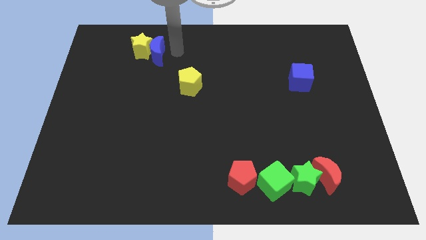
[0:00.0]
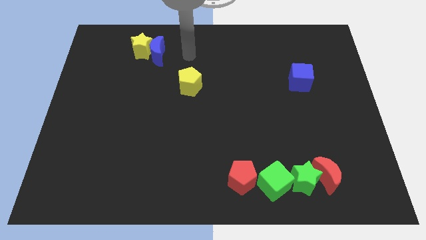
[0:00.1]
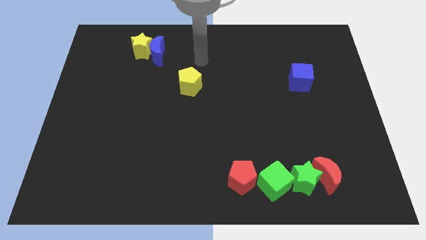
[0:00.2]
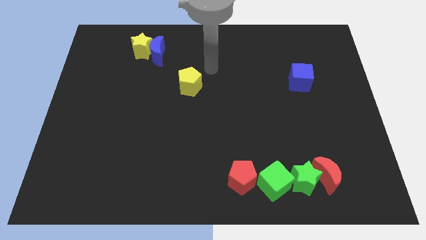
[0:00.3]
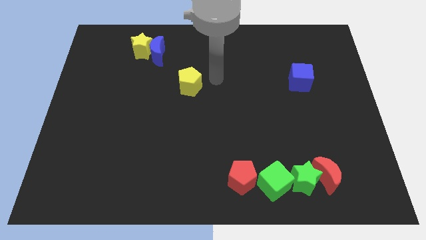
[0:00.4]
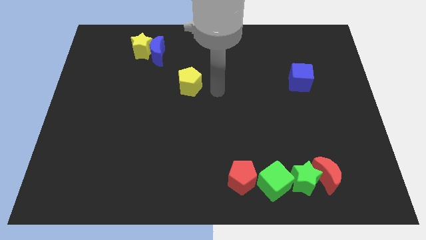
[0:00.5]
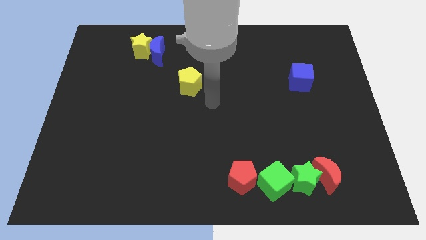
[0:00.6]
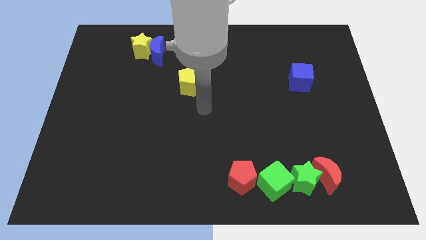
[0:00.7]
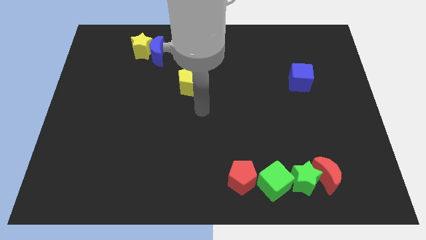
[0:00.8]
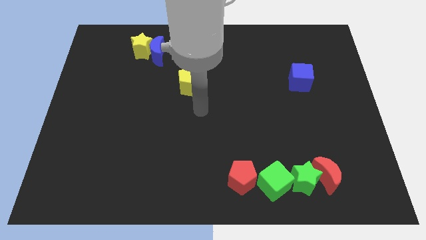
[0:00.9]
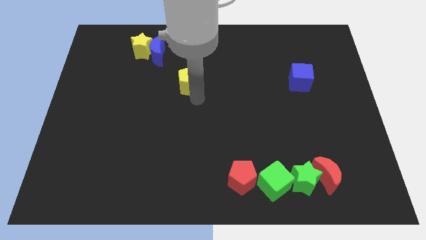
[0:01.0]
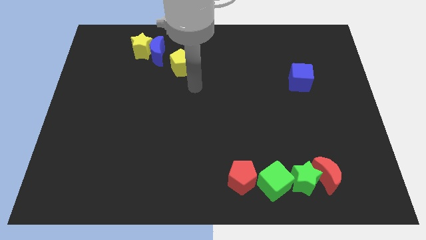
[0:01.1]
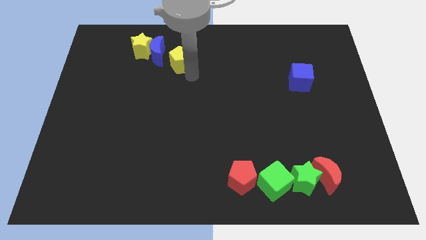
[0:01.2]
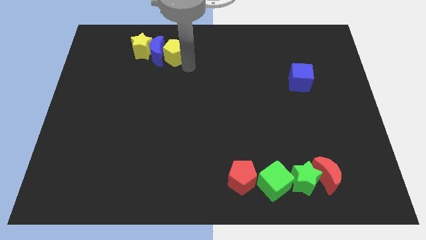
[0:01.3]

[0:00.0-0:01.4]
place the yellow pentagon to the right of the blue moon

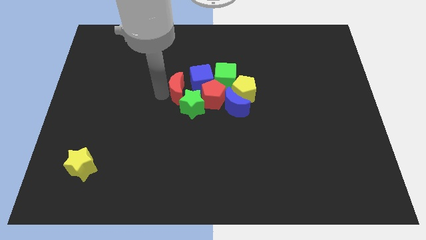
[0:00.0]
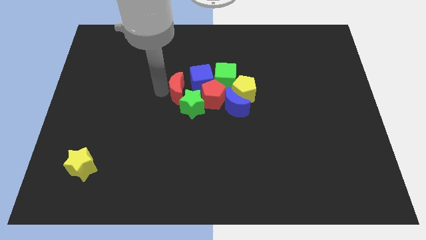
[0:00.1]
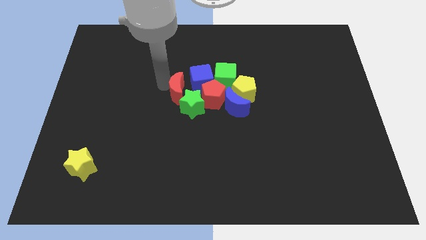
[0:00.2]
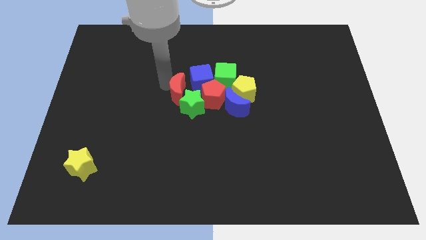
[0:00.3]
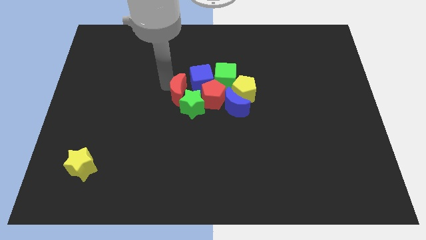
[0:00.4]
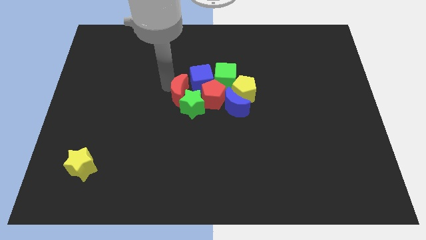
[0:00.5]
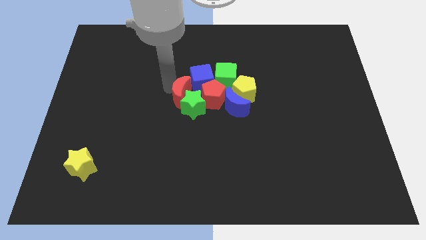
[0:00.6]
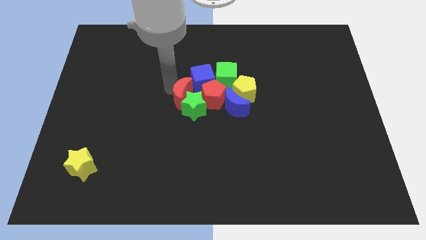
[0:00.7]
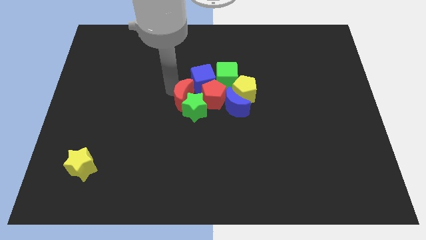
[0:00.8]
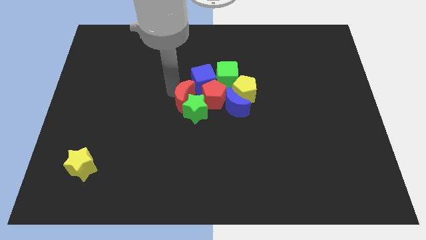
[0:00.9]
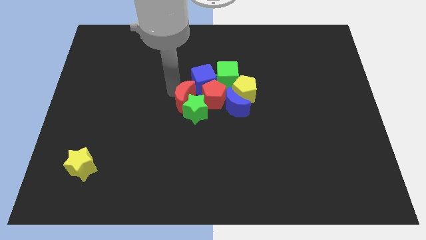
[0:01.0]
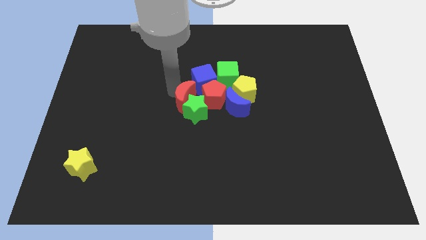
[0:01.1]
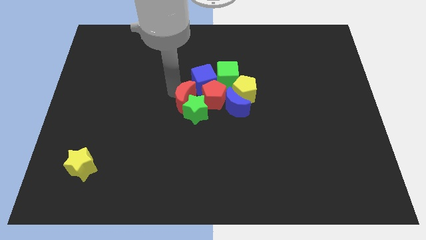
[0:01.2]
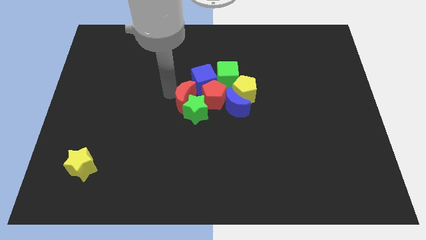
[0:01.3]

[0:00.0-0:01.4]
push the red moon into the group of blocks

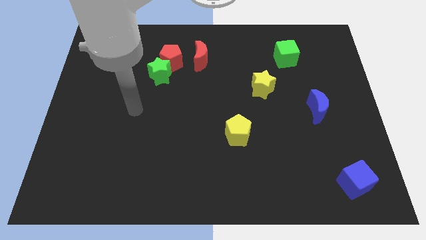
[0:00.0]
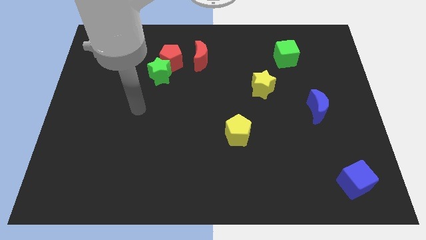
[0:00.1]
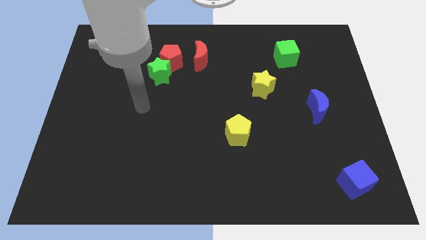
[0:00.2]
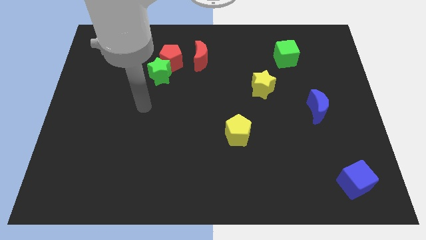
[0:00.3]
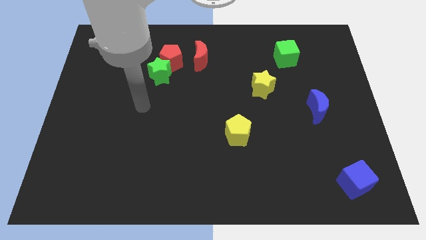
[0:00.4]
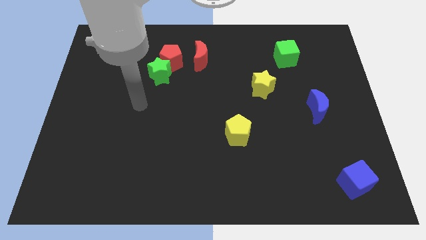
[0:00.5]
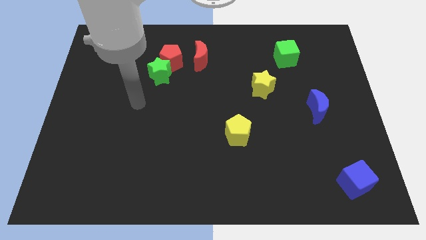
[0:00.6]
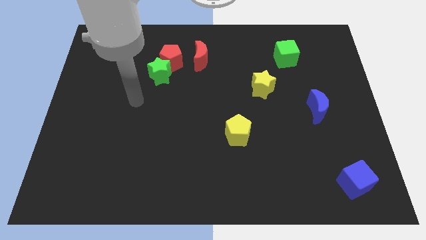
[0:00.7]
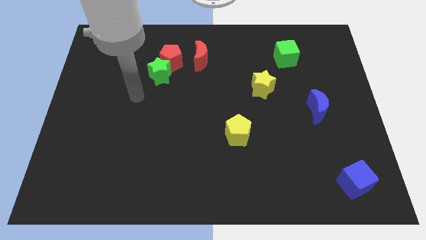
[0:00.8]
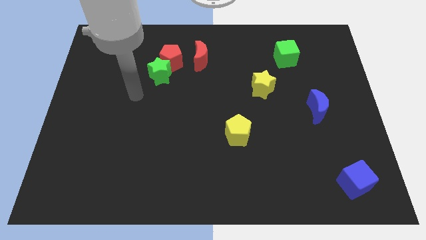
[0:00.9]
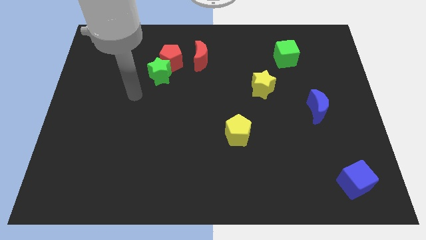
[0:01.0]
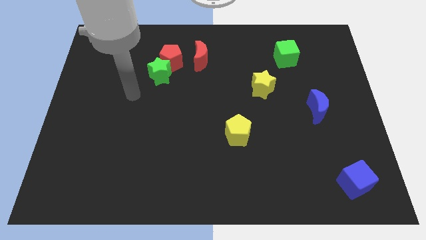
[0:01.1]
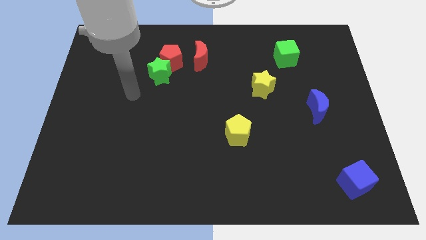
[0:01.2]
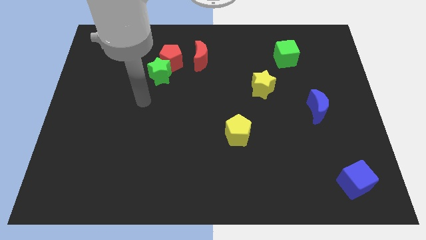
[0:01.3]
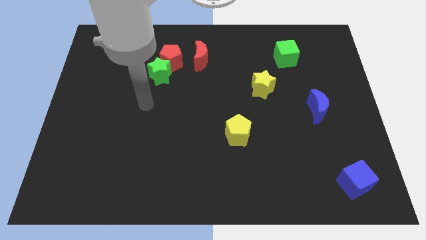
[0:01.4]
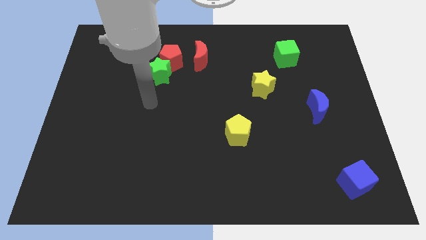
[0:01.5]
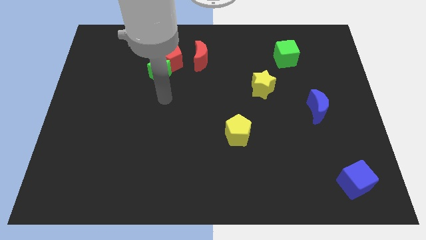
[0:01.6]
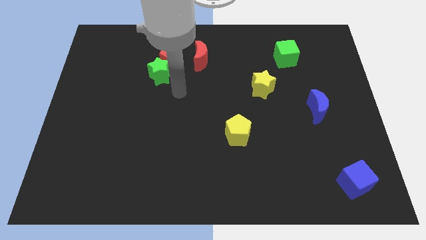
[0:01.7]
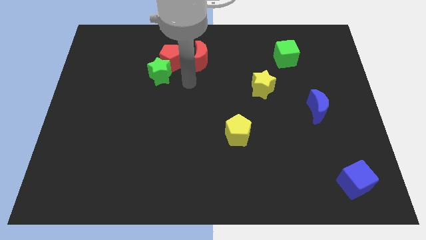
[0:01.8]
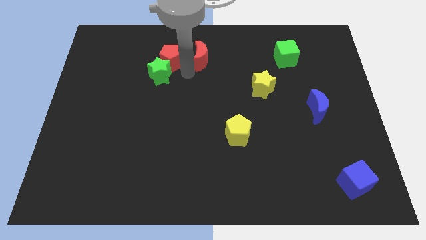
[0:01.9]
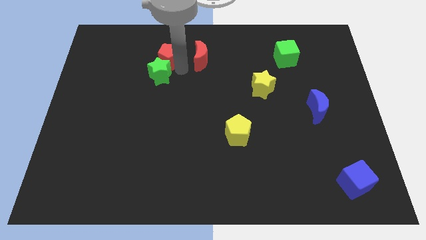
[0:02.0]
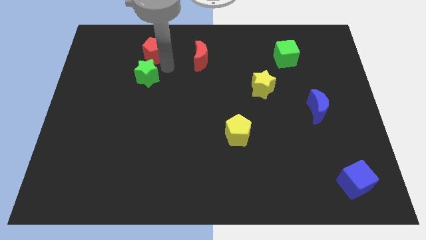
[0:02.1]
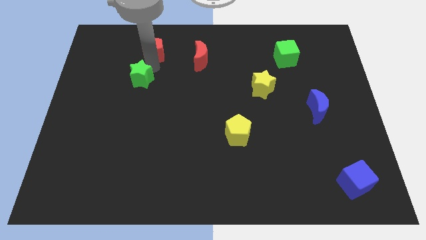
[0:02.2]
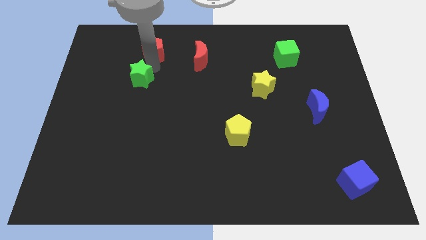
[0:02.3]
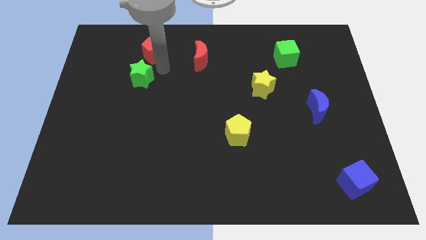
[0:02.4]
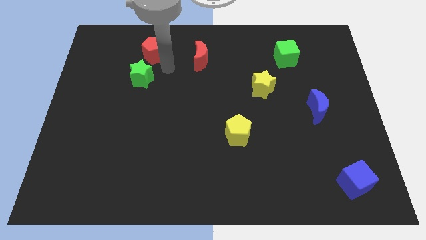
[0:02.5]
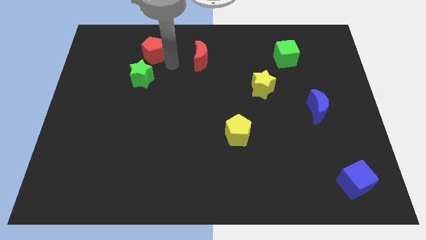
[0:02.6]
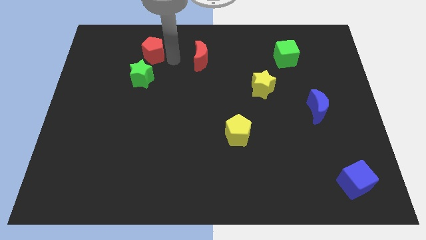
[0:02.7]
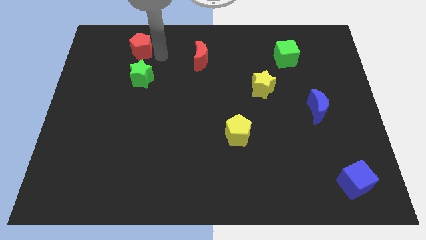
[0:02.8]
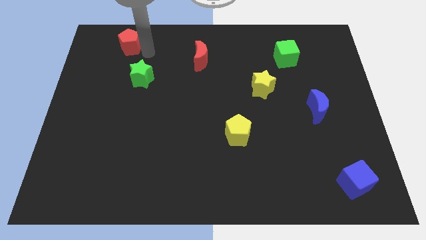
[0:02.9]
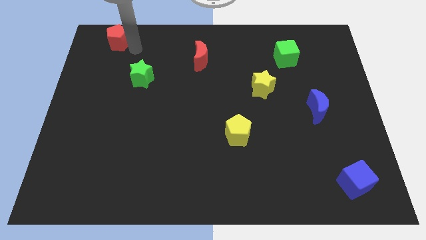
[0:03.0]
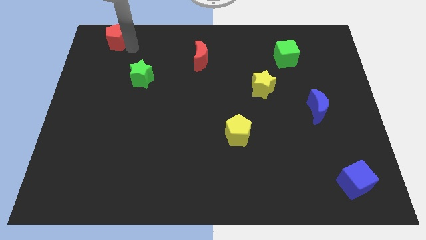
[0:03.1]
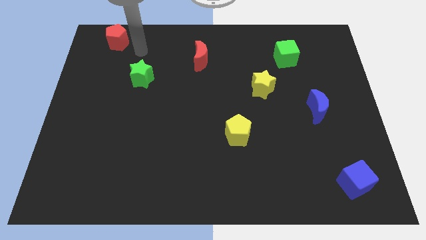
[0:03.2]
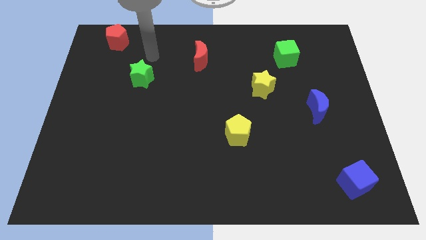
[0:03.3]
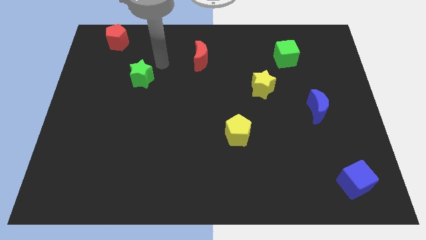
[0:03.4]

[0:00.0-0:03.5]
move the red pentagon to the top left of the board

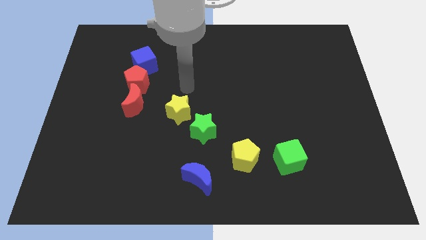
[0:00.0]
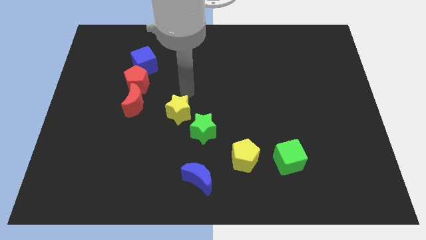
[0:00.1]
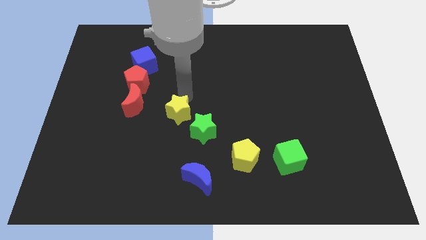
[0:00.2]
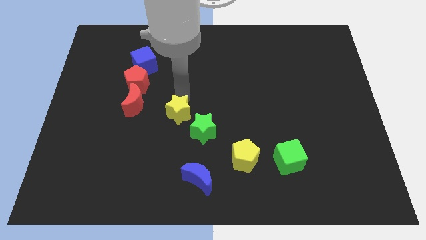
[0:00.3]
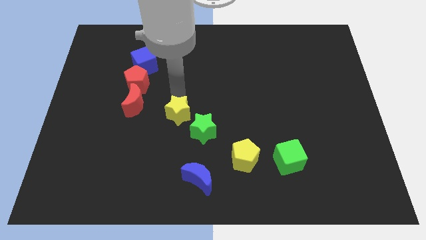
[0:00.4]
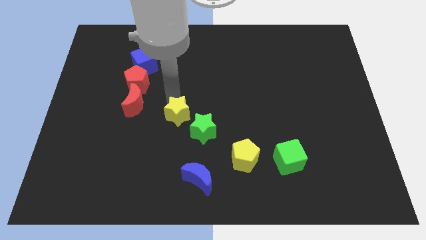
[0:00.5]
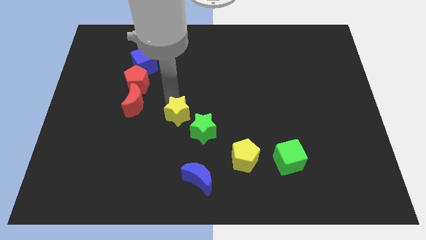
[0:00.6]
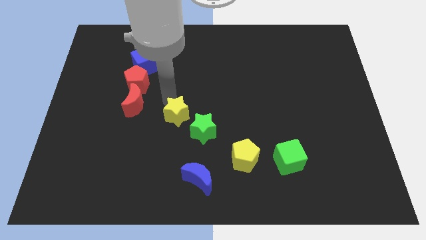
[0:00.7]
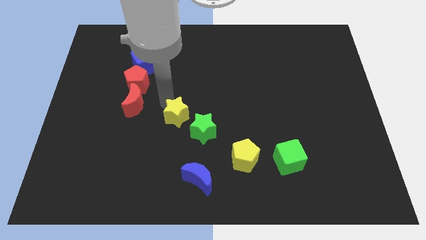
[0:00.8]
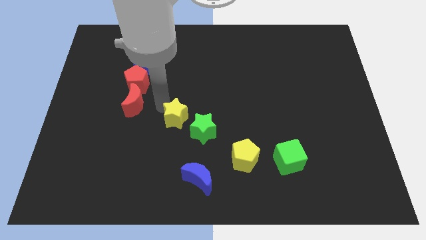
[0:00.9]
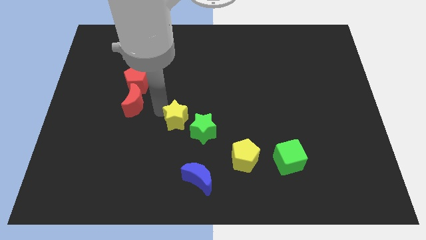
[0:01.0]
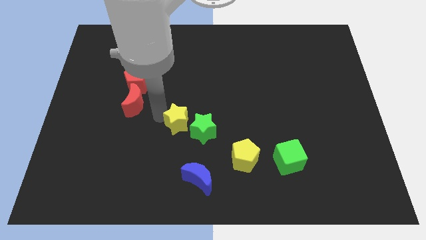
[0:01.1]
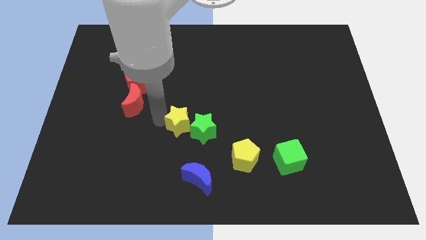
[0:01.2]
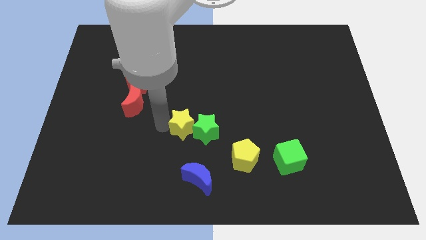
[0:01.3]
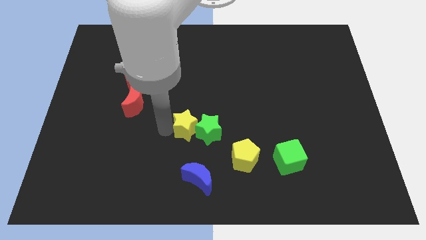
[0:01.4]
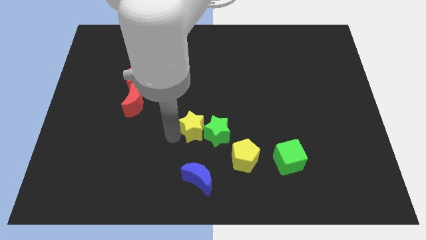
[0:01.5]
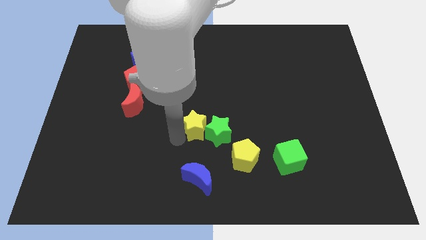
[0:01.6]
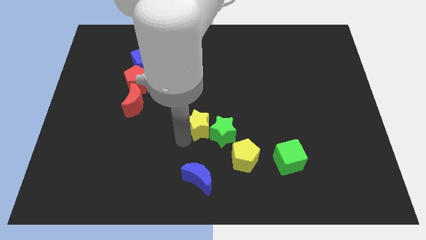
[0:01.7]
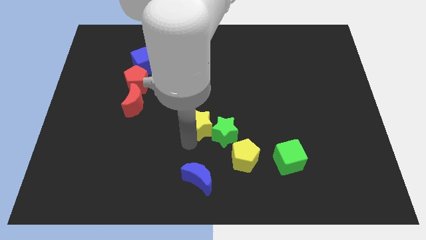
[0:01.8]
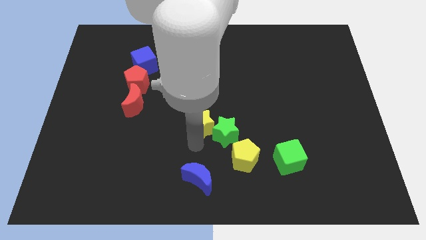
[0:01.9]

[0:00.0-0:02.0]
slide the yellow star into the left side of the green star

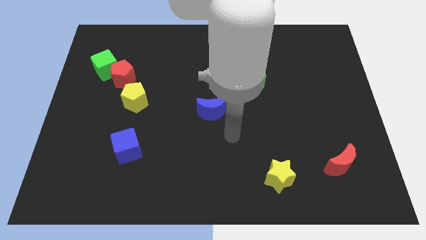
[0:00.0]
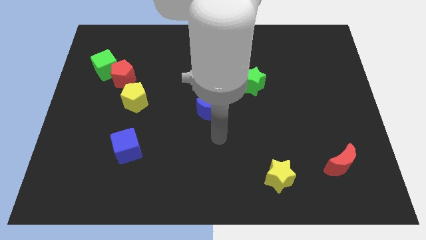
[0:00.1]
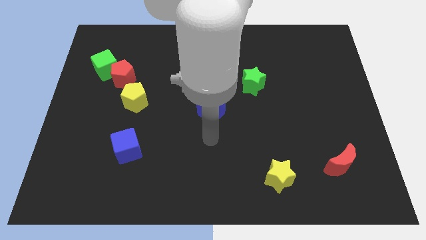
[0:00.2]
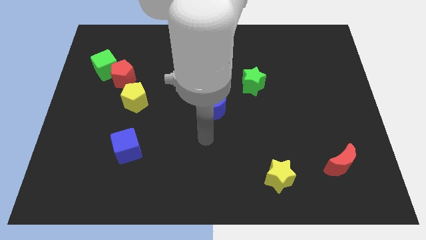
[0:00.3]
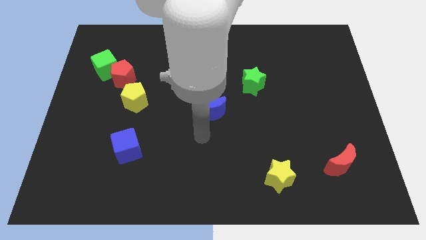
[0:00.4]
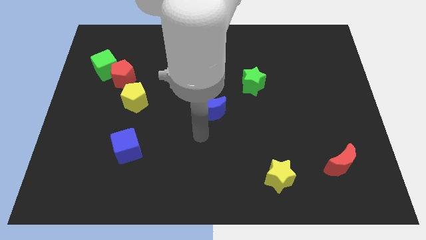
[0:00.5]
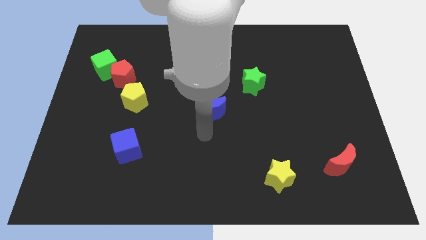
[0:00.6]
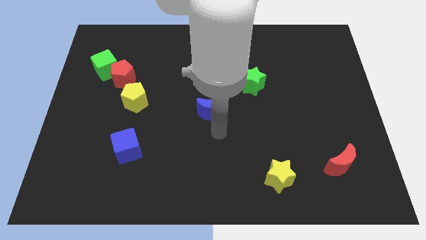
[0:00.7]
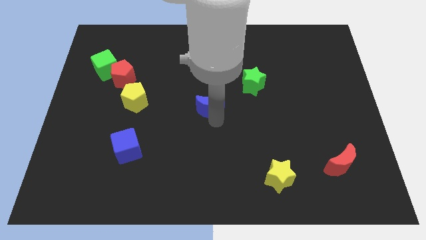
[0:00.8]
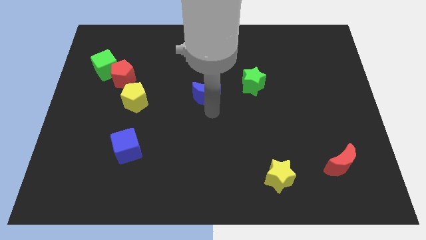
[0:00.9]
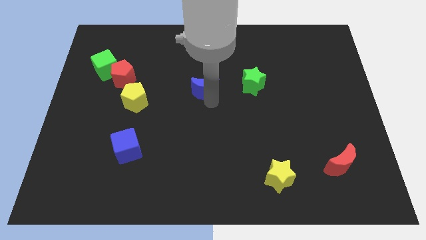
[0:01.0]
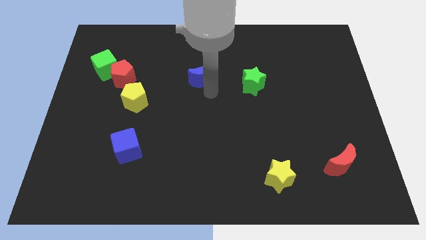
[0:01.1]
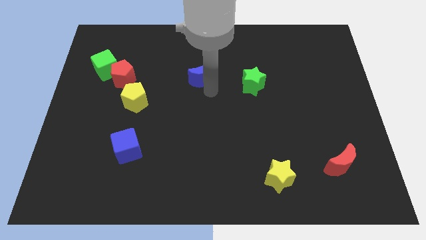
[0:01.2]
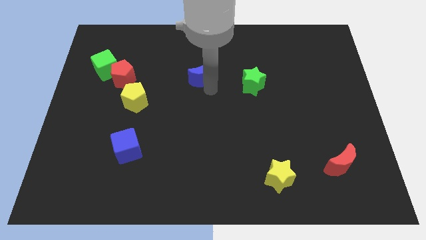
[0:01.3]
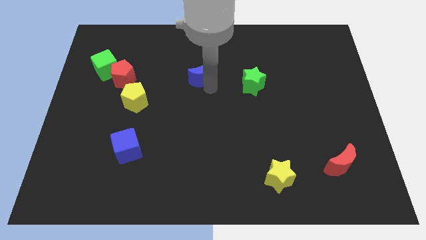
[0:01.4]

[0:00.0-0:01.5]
move the blue moon towards top
